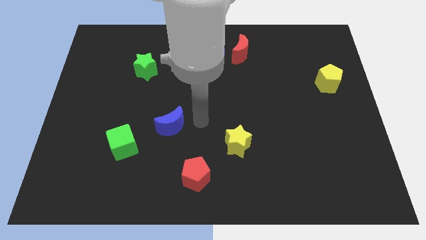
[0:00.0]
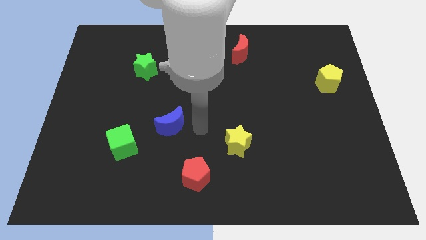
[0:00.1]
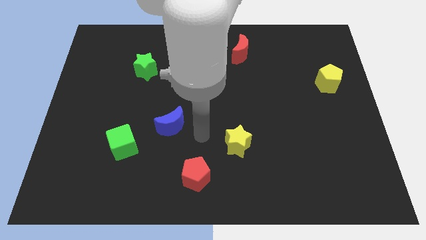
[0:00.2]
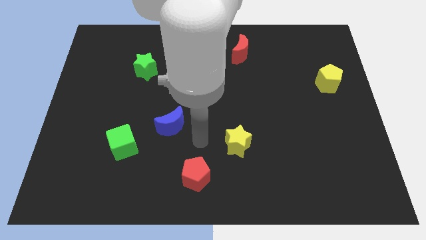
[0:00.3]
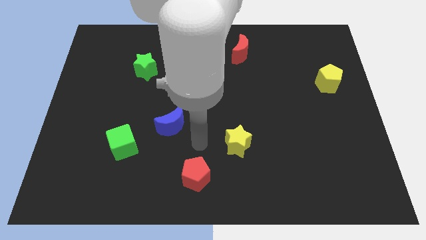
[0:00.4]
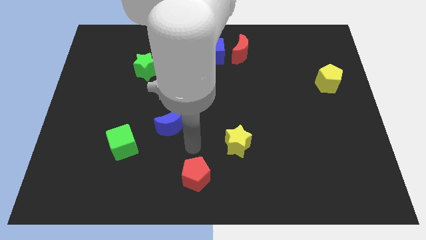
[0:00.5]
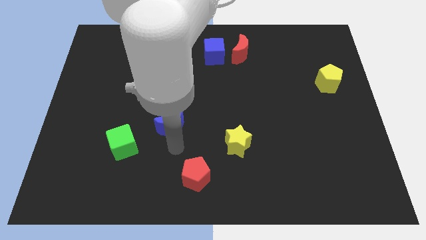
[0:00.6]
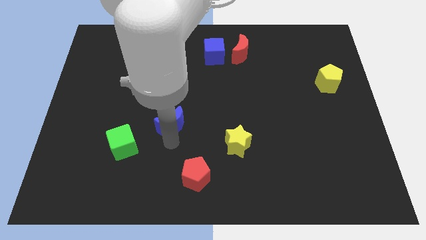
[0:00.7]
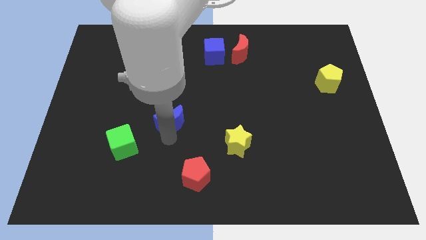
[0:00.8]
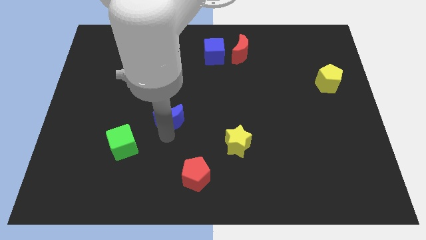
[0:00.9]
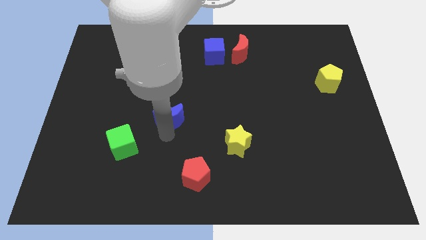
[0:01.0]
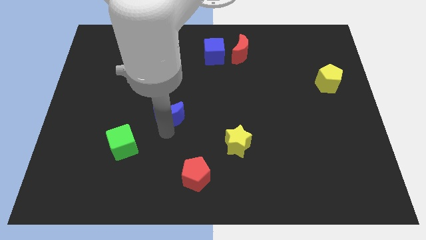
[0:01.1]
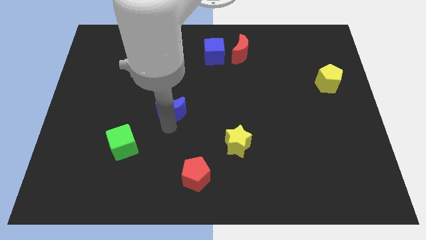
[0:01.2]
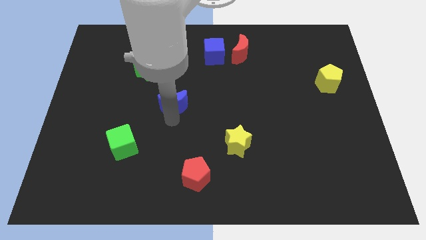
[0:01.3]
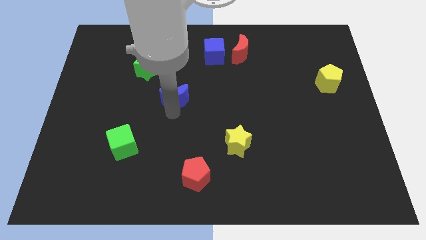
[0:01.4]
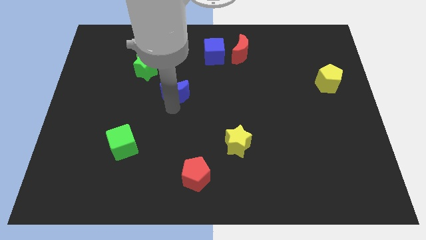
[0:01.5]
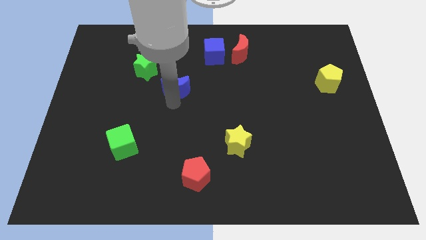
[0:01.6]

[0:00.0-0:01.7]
move the blue moon towards the top side

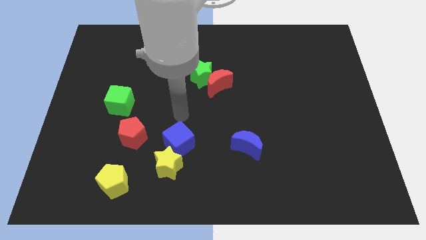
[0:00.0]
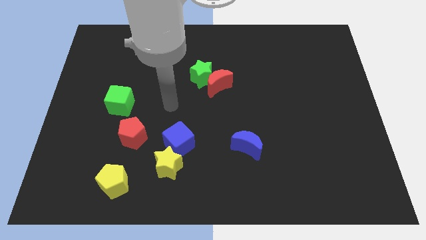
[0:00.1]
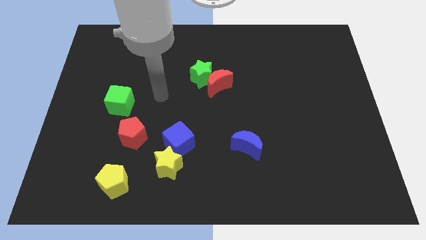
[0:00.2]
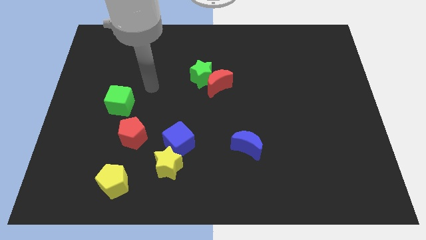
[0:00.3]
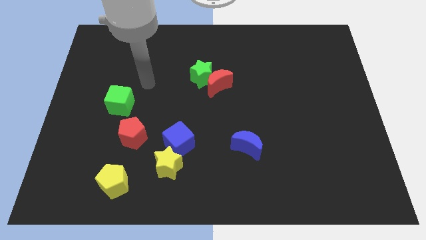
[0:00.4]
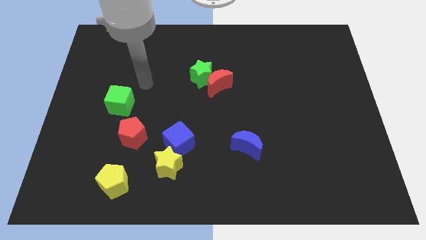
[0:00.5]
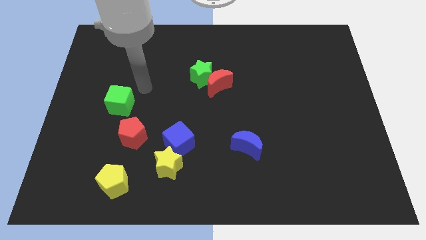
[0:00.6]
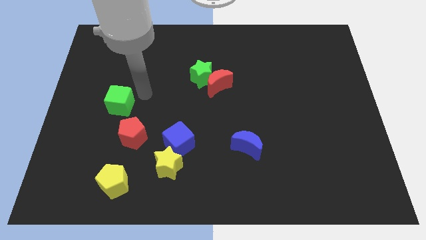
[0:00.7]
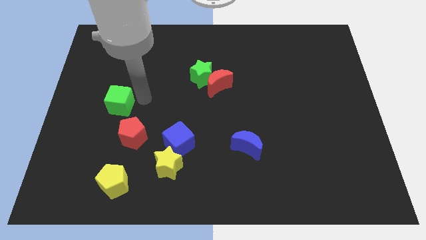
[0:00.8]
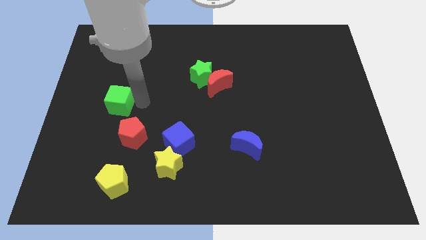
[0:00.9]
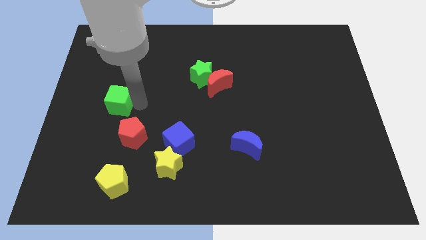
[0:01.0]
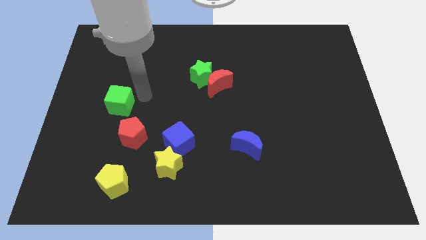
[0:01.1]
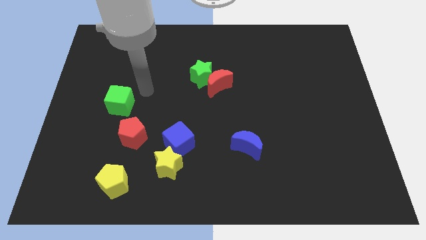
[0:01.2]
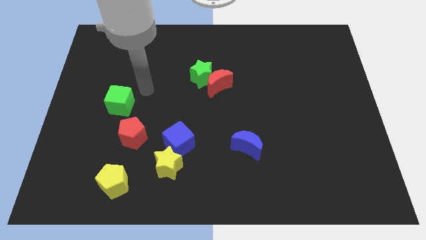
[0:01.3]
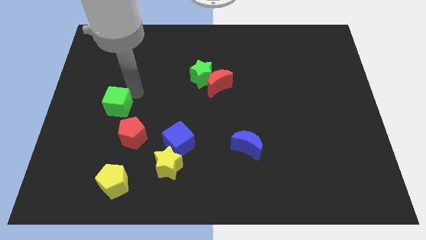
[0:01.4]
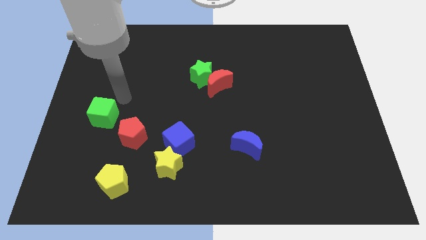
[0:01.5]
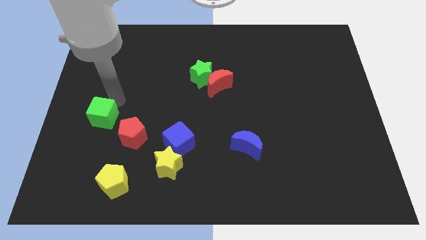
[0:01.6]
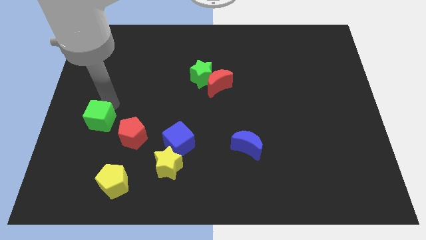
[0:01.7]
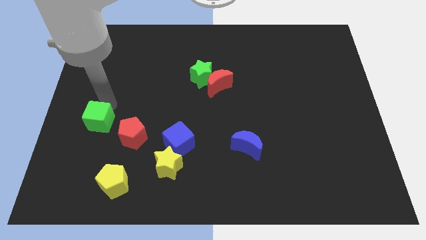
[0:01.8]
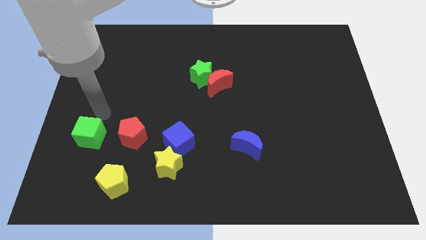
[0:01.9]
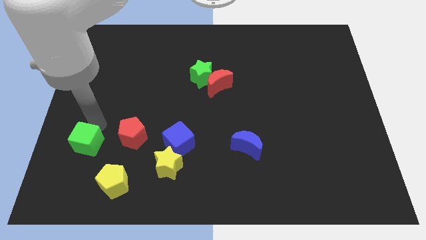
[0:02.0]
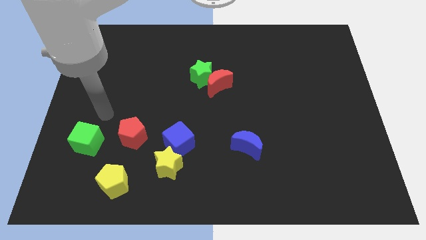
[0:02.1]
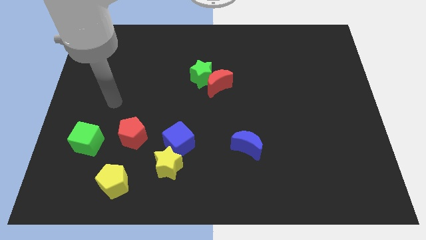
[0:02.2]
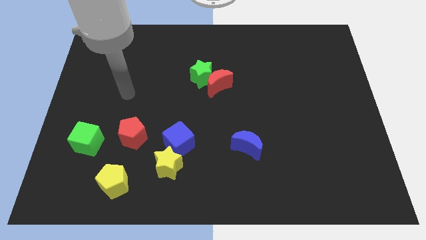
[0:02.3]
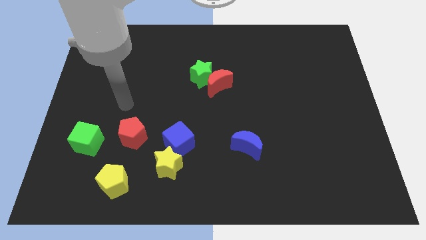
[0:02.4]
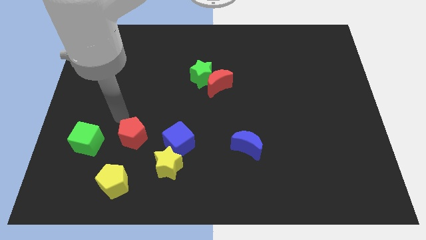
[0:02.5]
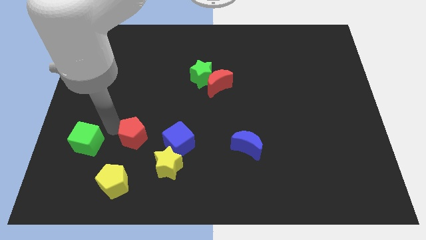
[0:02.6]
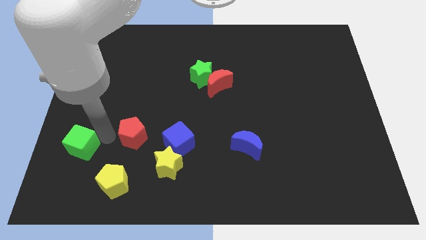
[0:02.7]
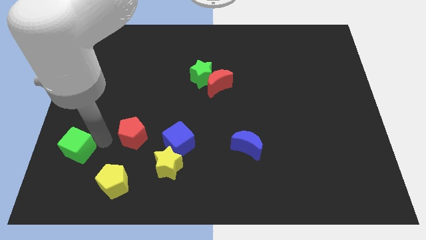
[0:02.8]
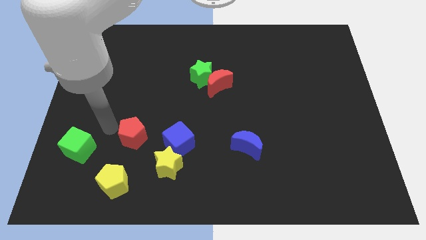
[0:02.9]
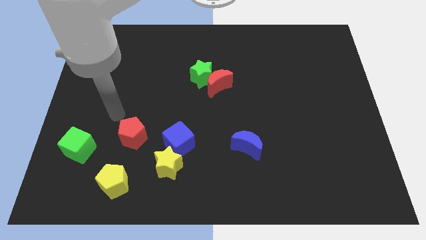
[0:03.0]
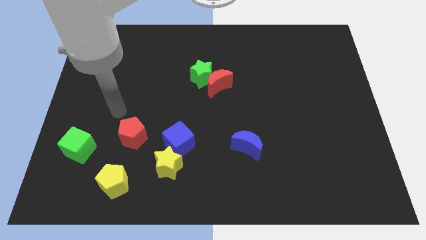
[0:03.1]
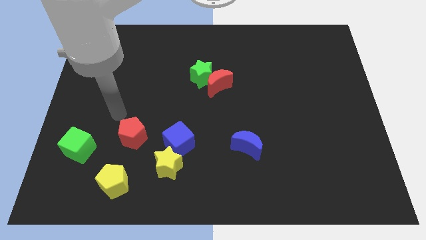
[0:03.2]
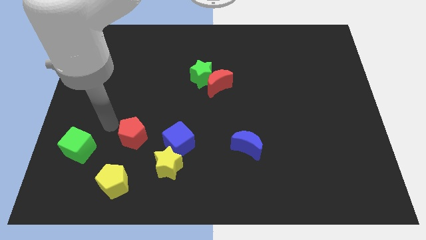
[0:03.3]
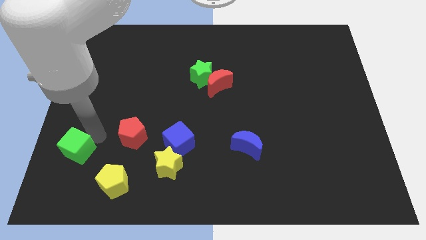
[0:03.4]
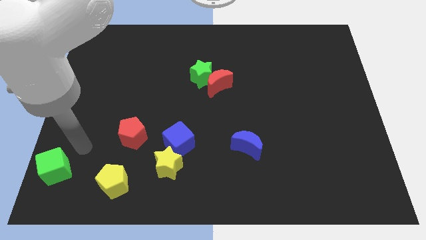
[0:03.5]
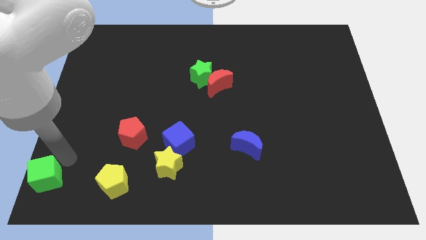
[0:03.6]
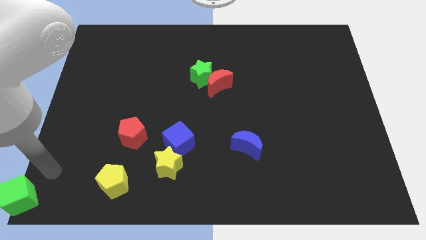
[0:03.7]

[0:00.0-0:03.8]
put the green cube to the left of the yellow pentagon
